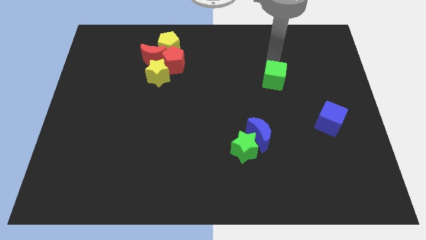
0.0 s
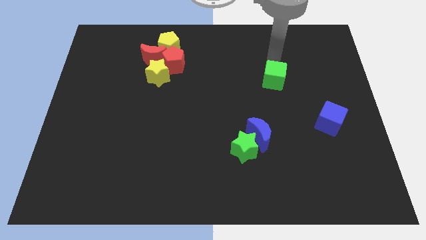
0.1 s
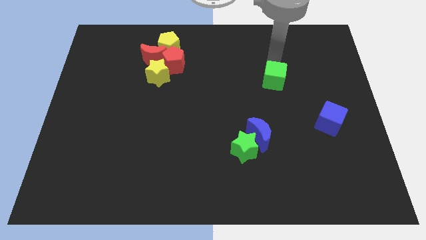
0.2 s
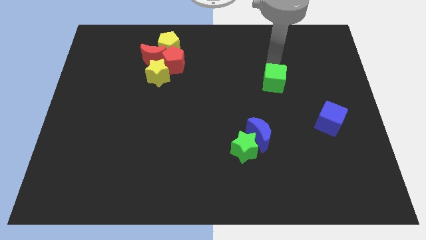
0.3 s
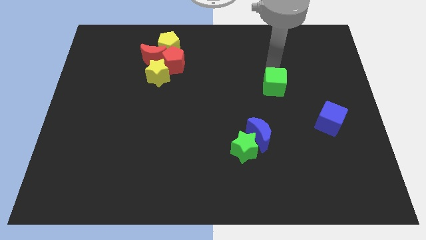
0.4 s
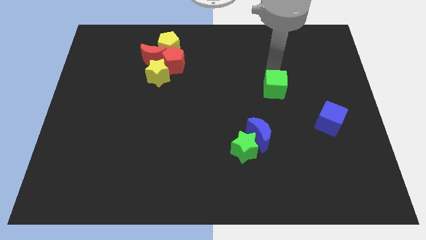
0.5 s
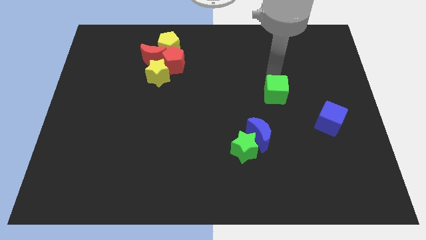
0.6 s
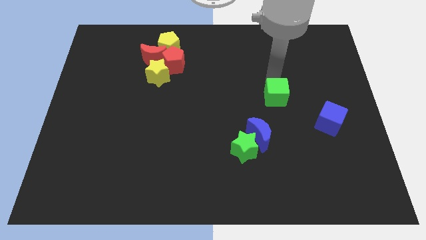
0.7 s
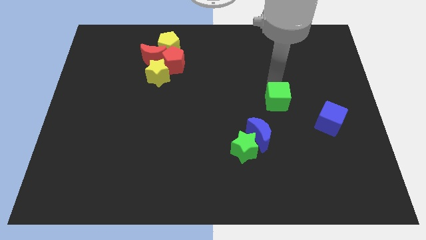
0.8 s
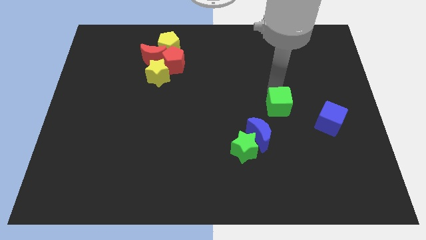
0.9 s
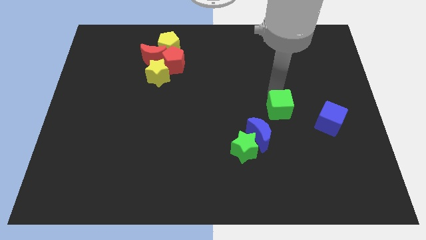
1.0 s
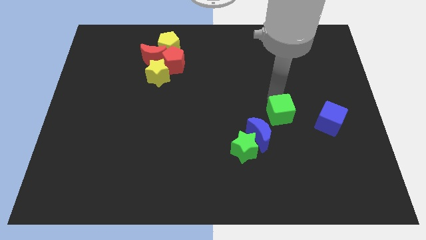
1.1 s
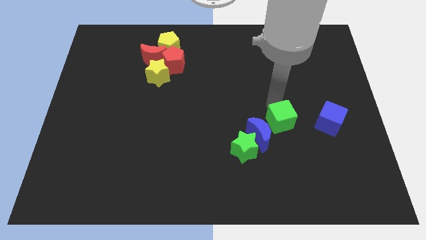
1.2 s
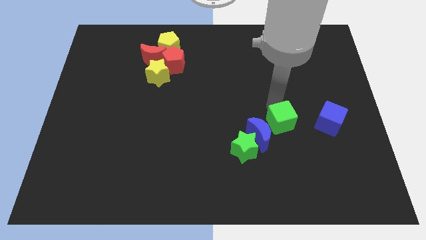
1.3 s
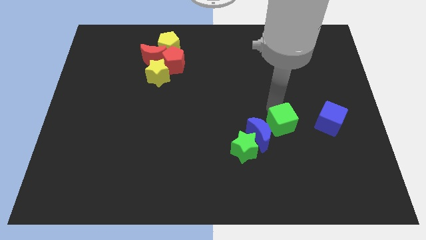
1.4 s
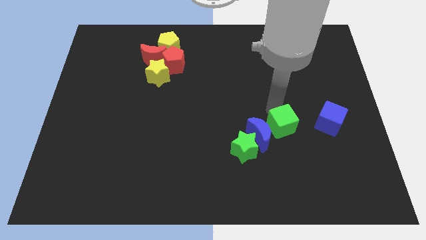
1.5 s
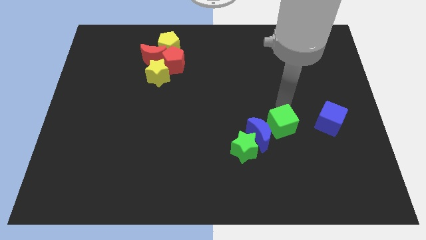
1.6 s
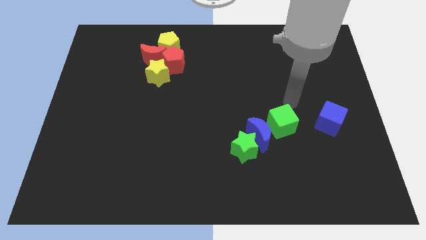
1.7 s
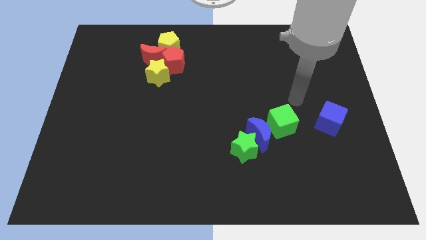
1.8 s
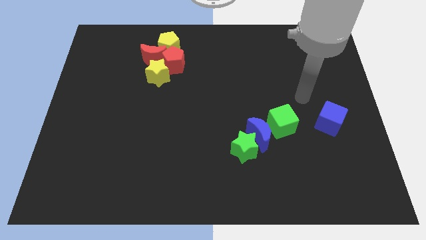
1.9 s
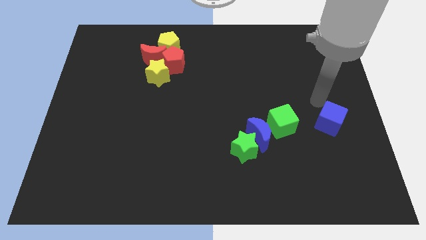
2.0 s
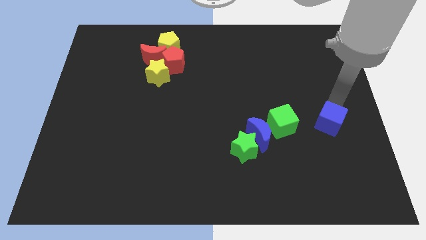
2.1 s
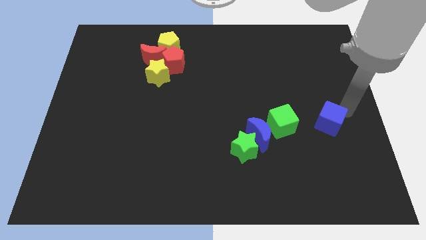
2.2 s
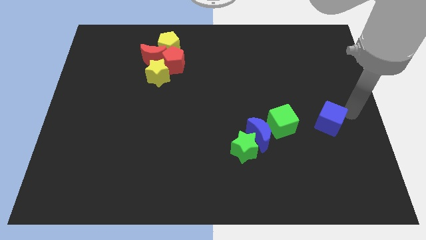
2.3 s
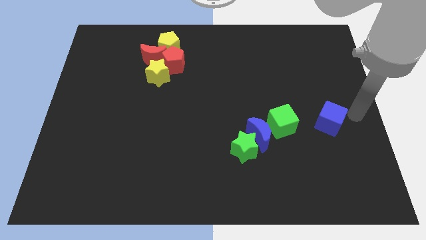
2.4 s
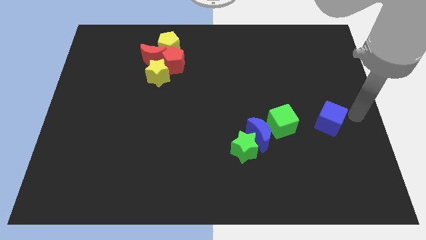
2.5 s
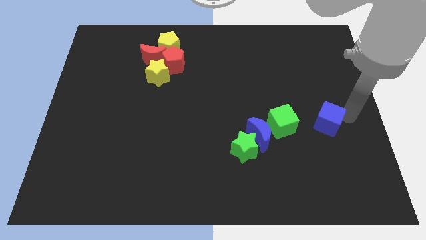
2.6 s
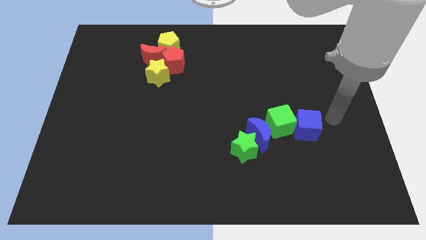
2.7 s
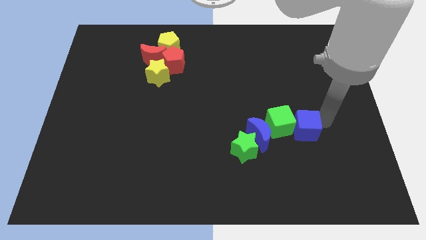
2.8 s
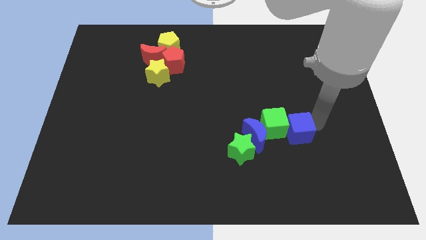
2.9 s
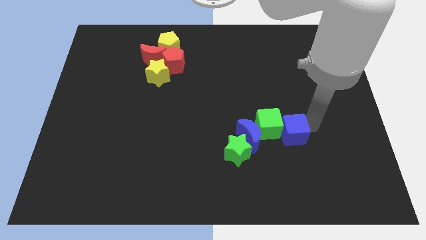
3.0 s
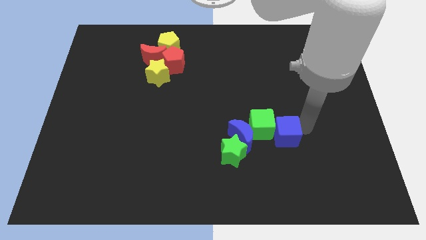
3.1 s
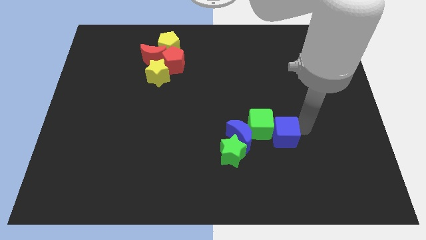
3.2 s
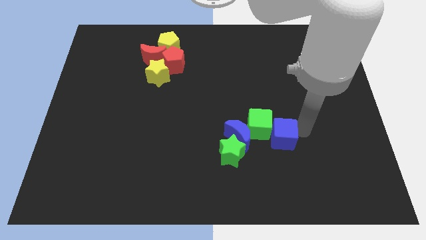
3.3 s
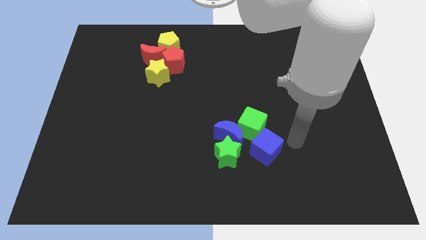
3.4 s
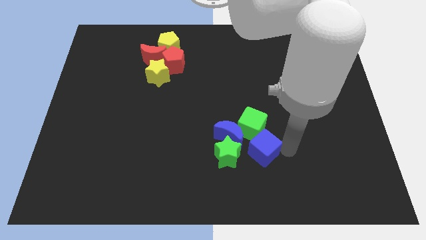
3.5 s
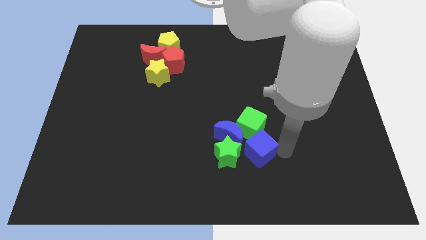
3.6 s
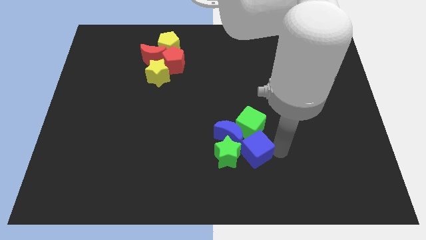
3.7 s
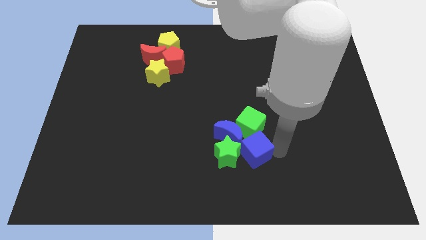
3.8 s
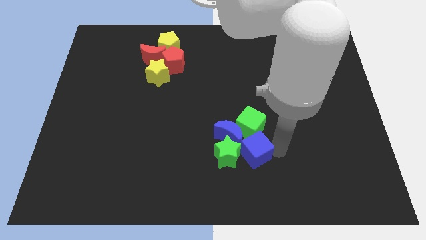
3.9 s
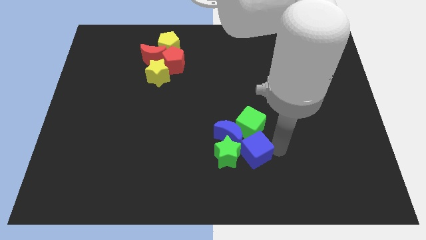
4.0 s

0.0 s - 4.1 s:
make a group of green and blue blocks

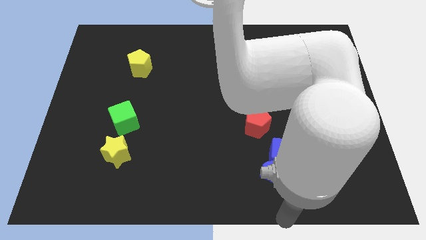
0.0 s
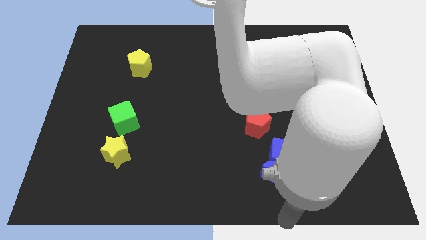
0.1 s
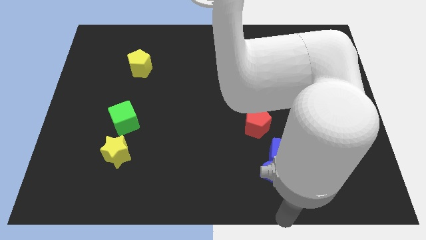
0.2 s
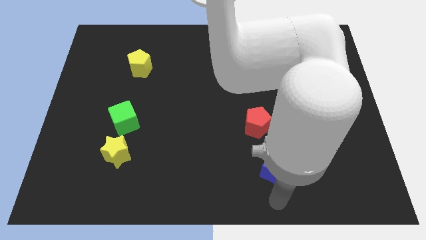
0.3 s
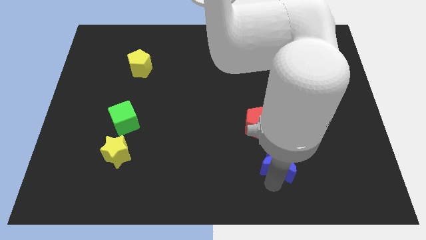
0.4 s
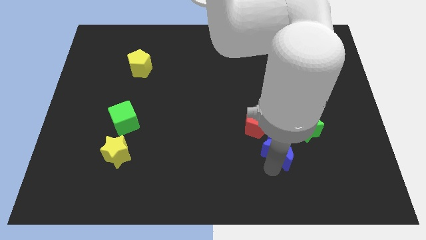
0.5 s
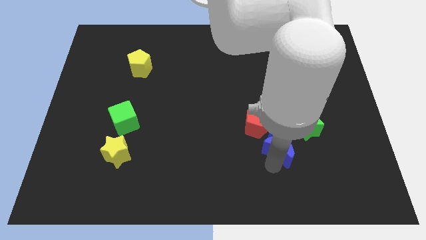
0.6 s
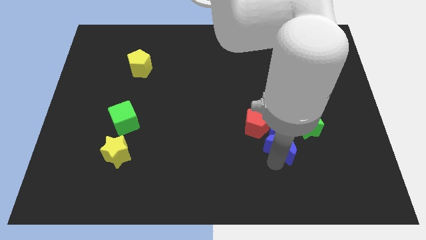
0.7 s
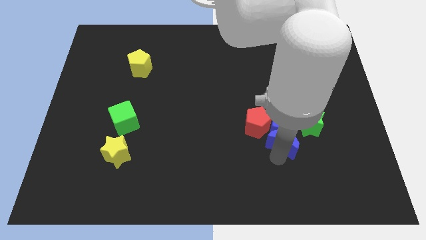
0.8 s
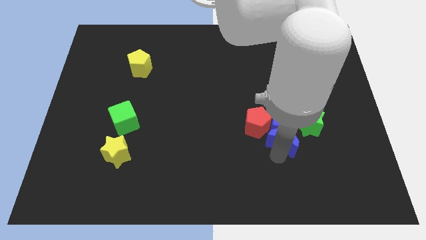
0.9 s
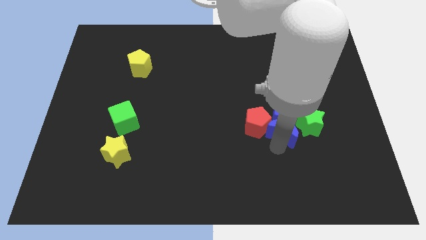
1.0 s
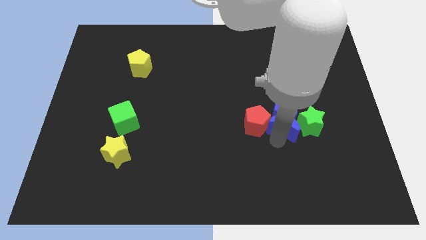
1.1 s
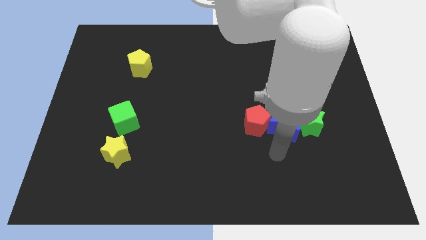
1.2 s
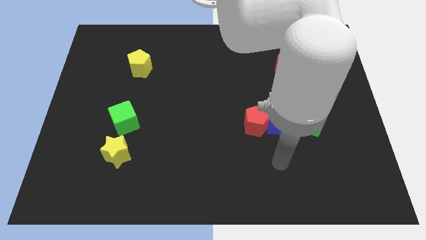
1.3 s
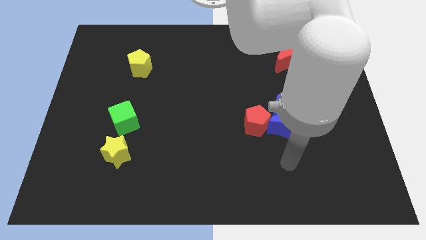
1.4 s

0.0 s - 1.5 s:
place the blue moon in between red pentagon and green star

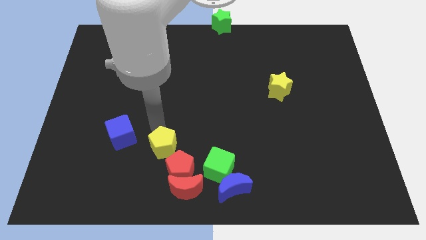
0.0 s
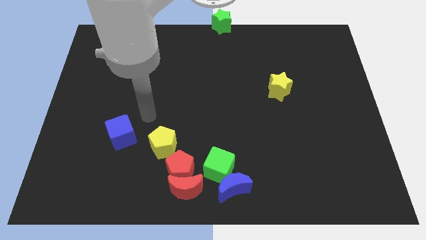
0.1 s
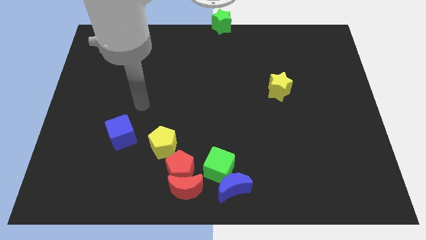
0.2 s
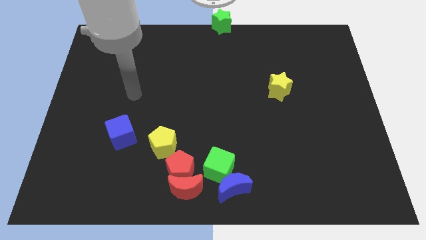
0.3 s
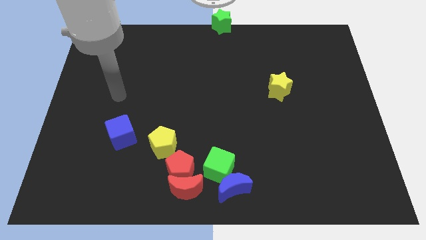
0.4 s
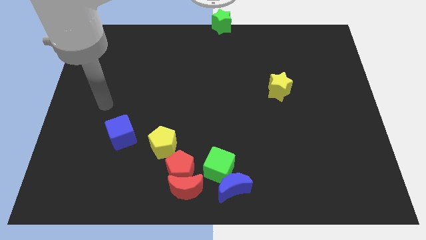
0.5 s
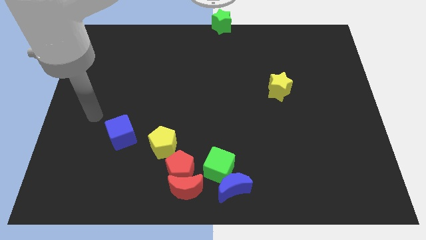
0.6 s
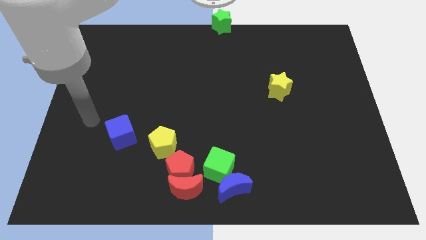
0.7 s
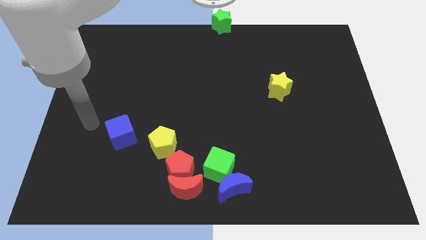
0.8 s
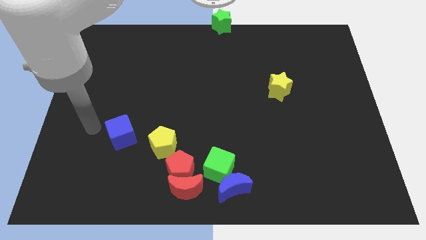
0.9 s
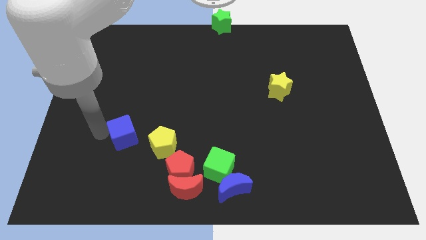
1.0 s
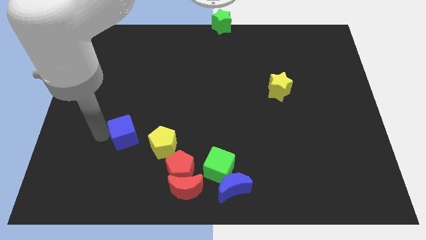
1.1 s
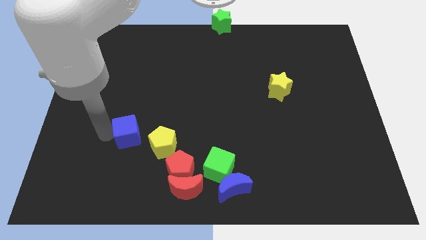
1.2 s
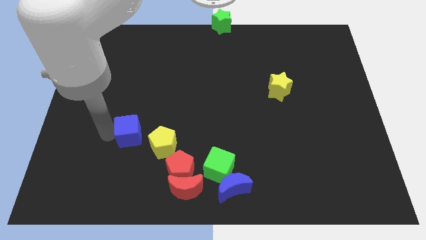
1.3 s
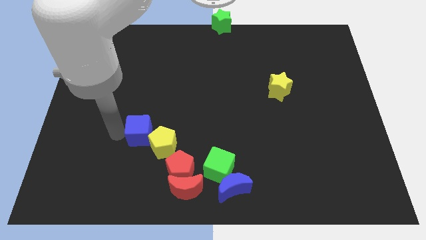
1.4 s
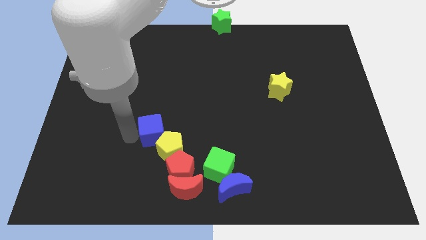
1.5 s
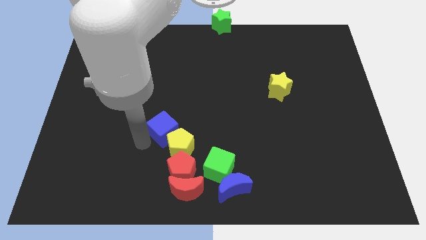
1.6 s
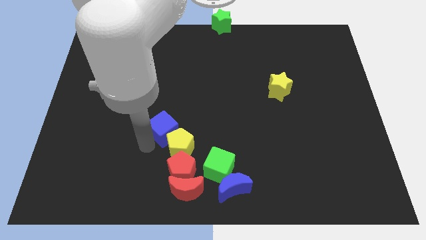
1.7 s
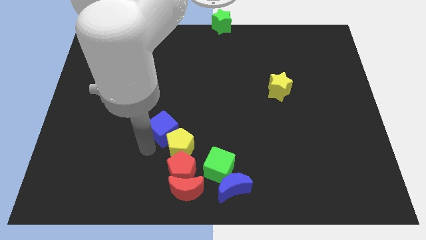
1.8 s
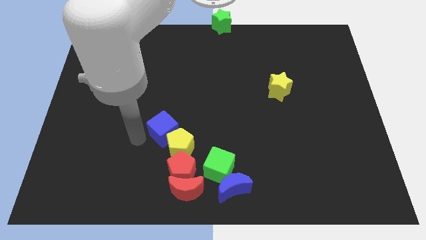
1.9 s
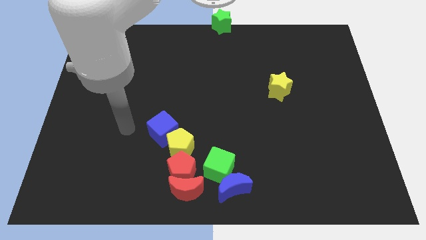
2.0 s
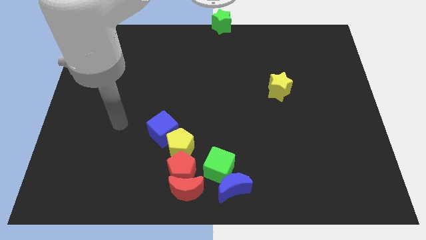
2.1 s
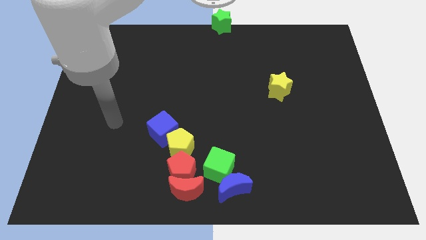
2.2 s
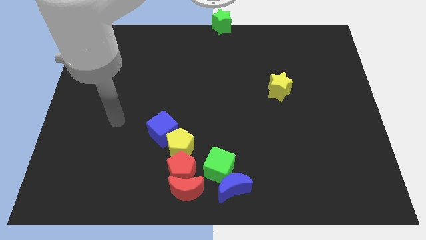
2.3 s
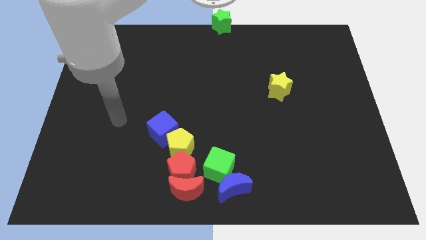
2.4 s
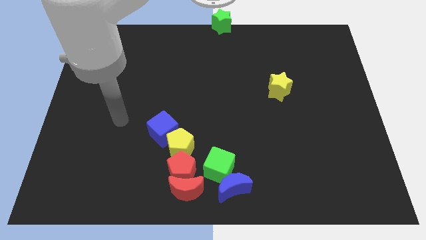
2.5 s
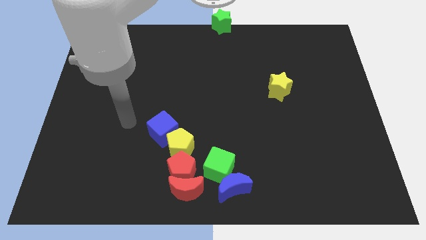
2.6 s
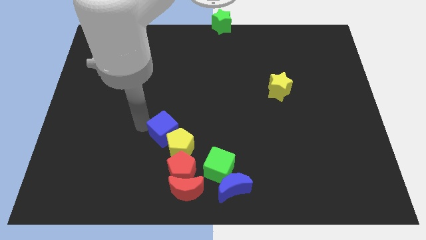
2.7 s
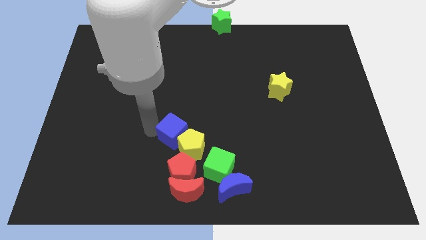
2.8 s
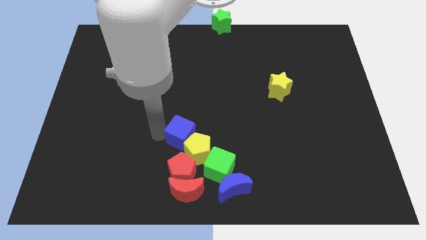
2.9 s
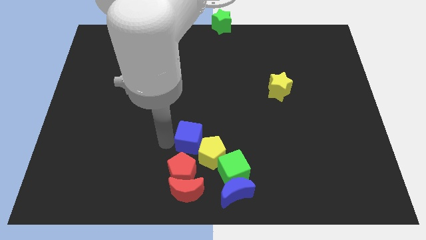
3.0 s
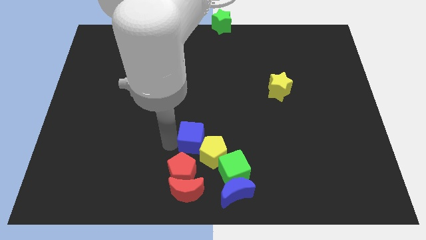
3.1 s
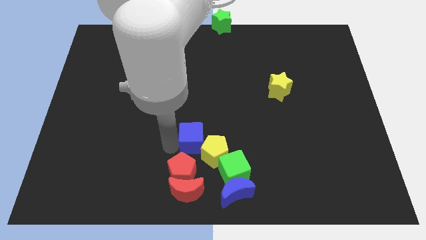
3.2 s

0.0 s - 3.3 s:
push the blue cube along with yellow pentagon into green cube

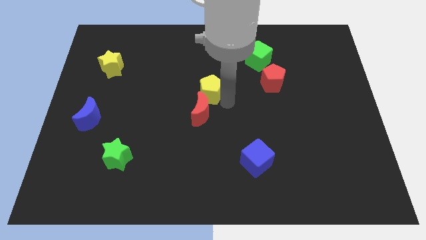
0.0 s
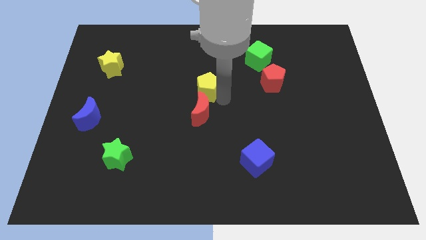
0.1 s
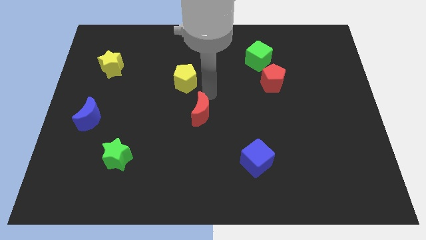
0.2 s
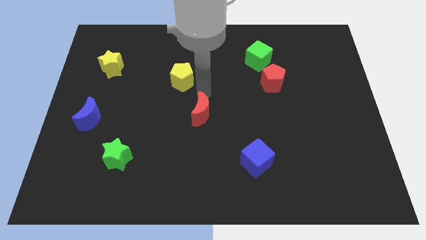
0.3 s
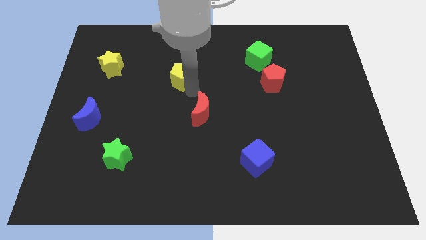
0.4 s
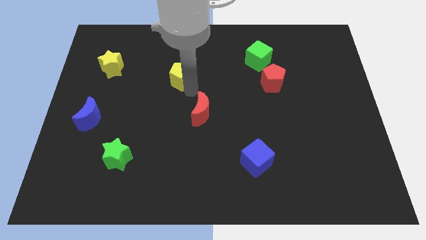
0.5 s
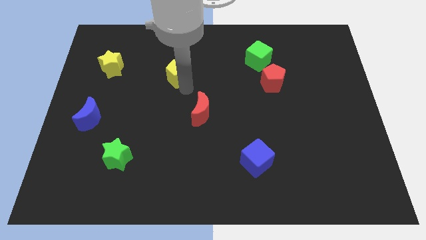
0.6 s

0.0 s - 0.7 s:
push yellow pentagon away from thee red moon
